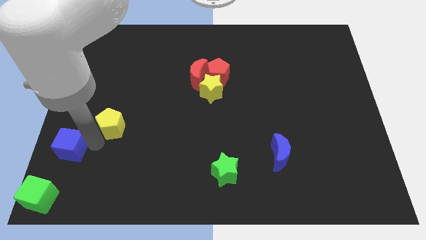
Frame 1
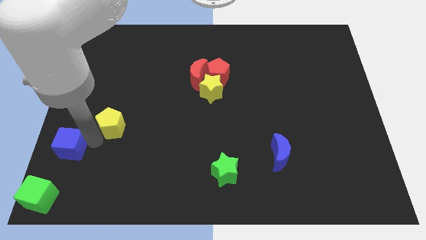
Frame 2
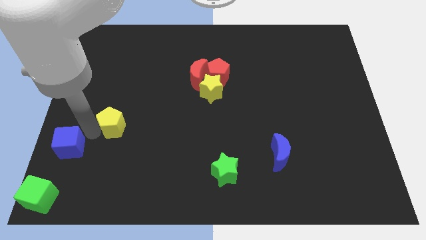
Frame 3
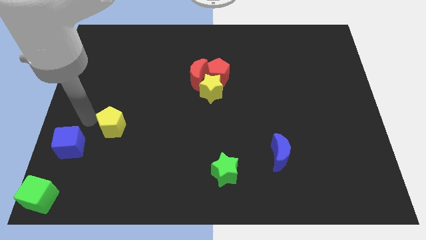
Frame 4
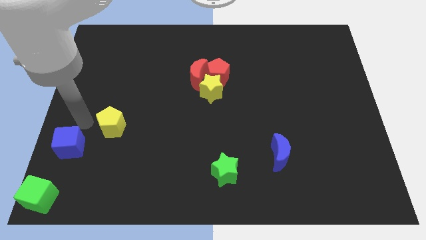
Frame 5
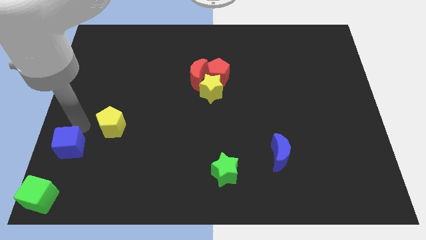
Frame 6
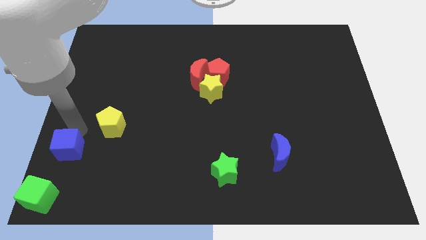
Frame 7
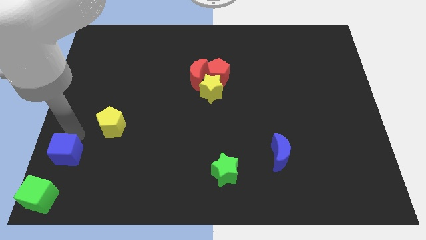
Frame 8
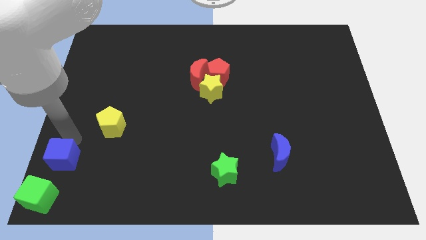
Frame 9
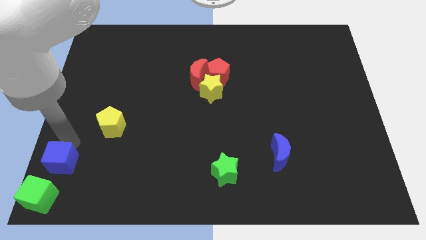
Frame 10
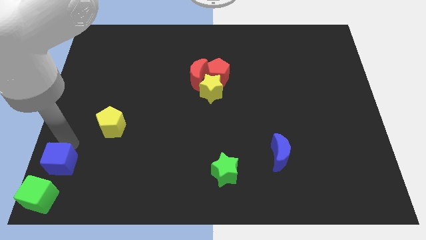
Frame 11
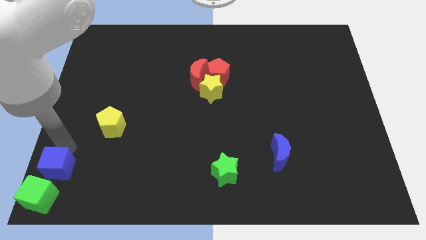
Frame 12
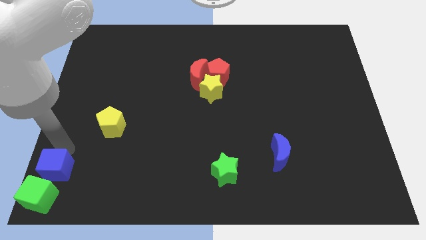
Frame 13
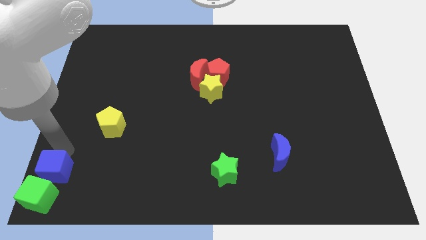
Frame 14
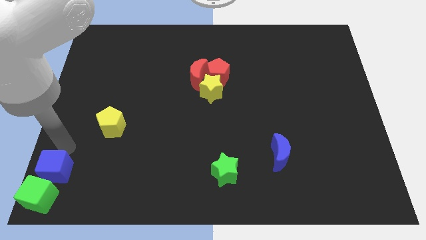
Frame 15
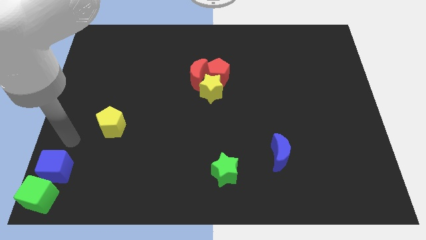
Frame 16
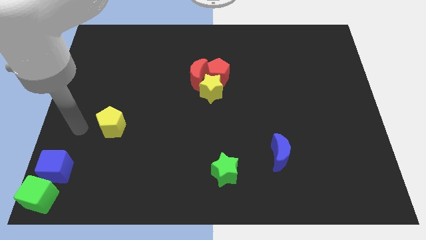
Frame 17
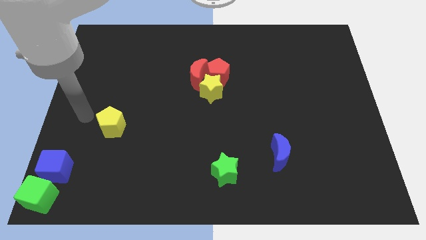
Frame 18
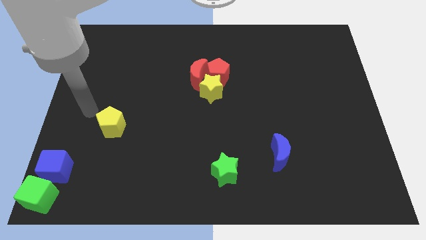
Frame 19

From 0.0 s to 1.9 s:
move blue cube close to the green cube

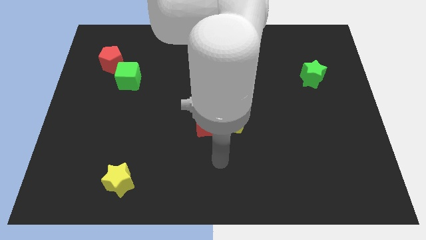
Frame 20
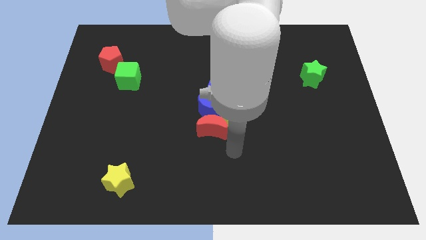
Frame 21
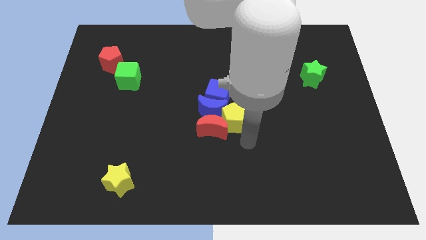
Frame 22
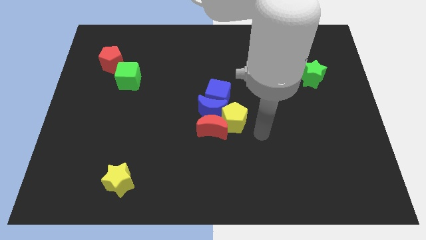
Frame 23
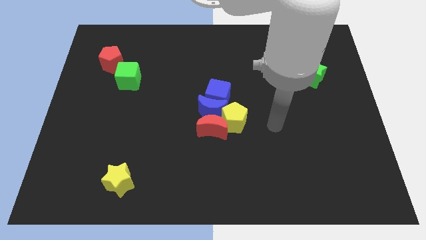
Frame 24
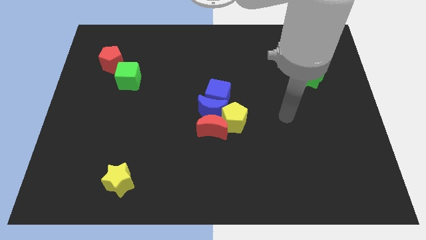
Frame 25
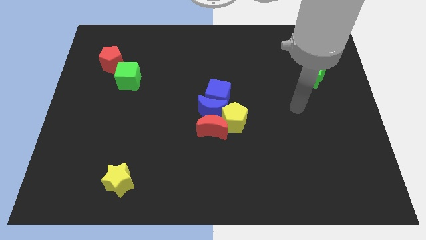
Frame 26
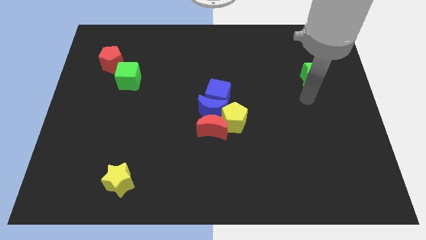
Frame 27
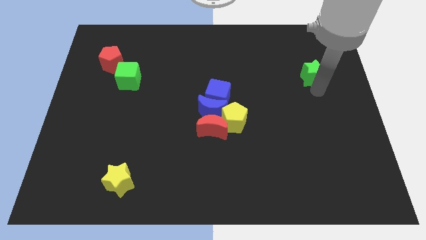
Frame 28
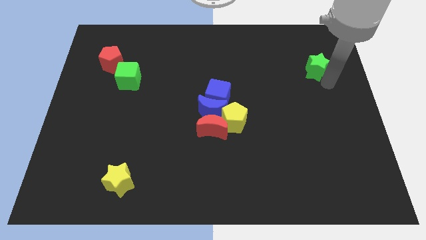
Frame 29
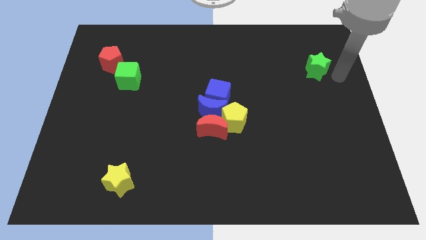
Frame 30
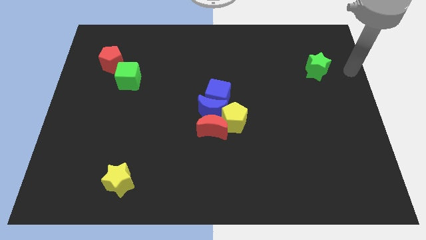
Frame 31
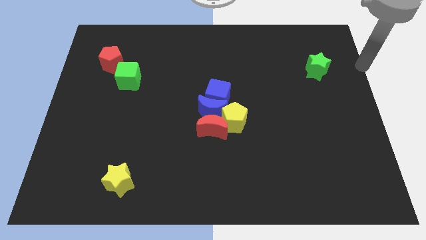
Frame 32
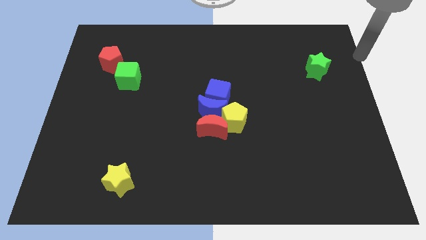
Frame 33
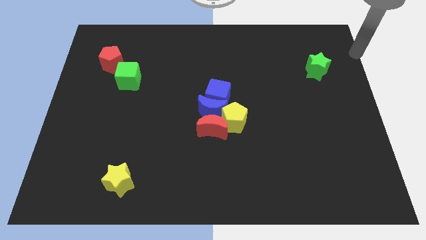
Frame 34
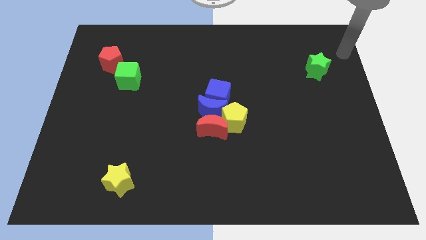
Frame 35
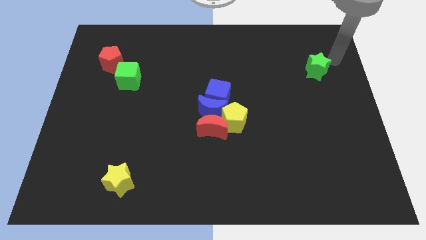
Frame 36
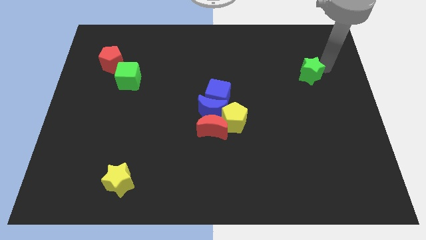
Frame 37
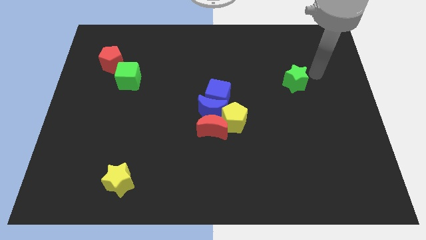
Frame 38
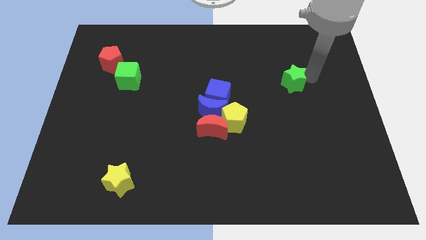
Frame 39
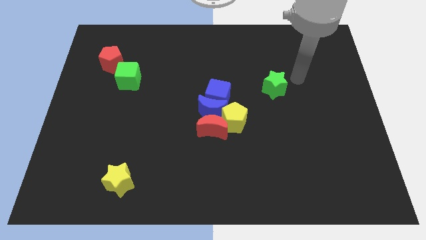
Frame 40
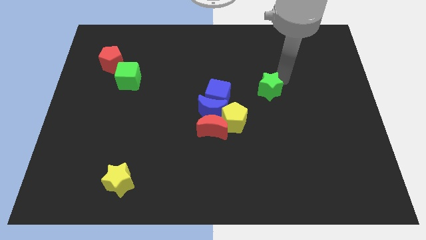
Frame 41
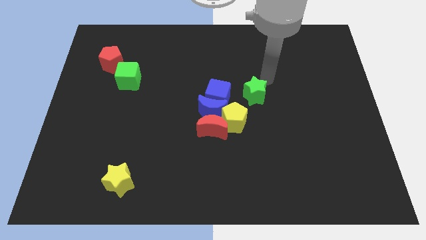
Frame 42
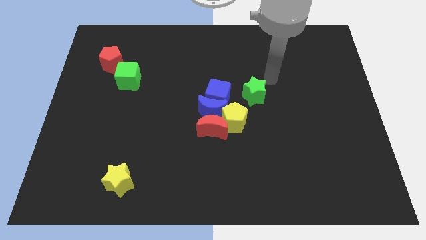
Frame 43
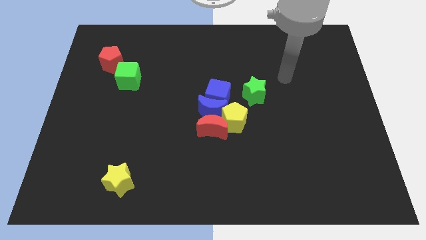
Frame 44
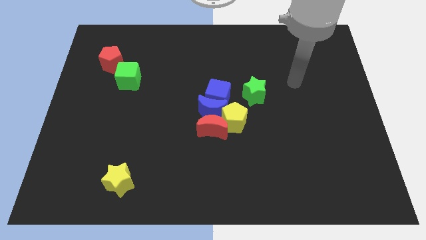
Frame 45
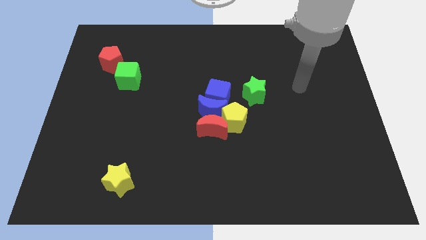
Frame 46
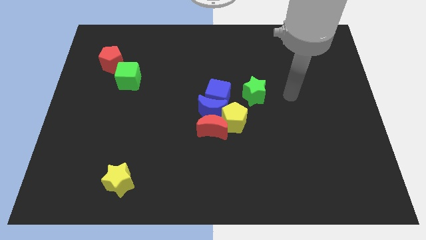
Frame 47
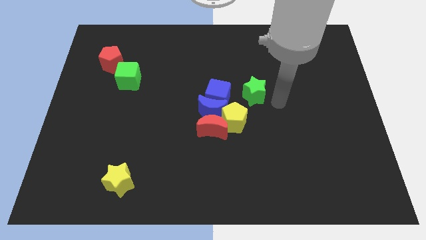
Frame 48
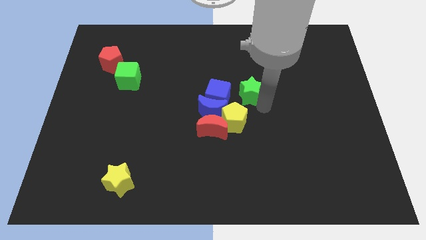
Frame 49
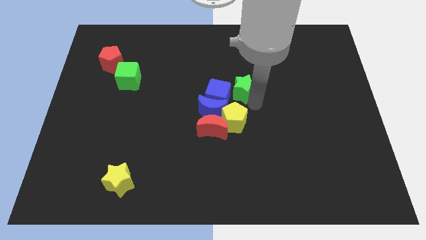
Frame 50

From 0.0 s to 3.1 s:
move the green star to the right of blue cube

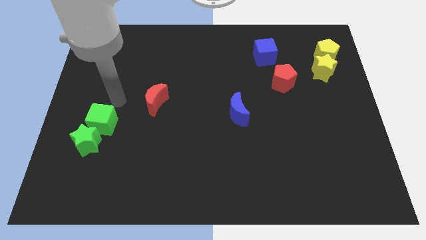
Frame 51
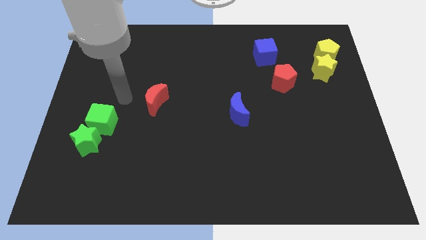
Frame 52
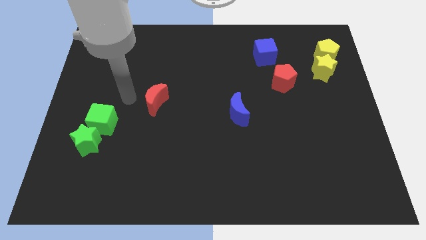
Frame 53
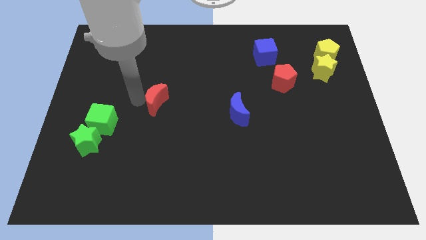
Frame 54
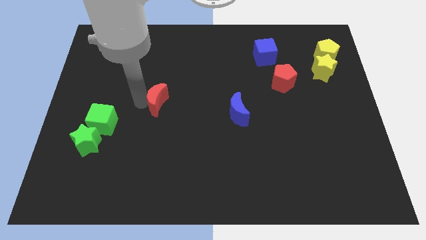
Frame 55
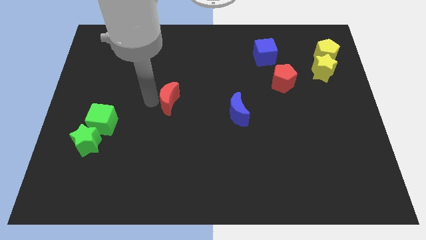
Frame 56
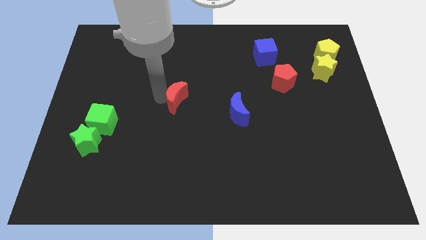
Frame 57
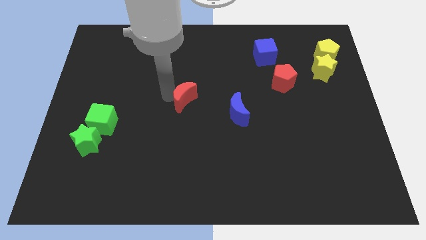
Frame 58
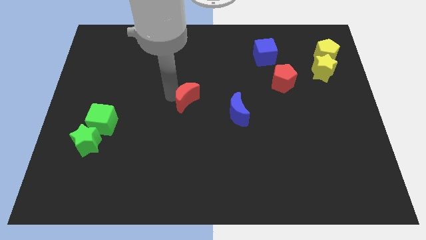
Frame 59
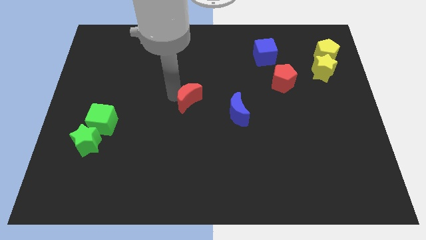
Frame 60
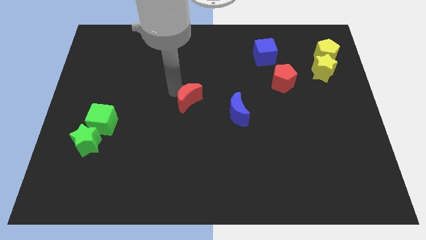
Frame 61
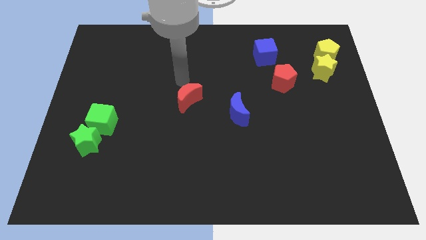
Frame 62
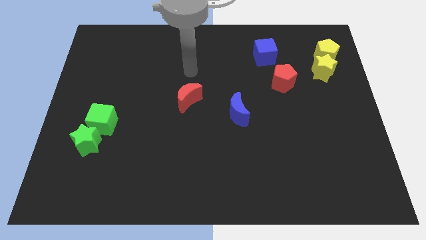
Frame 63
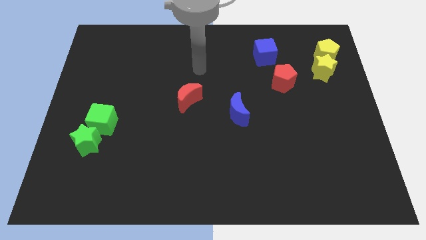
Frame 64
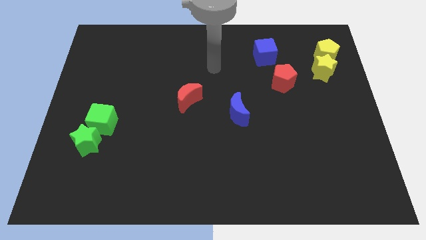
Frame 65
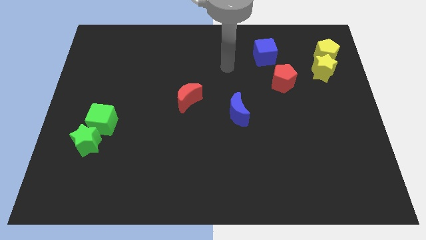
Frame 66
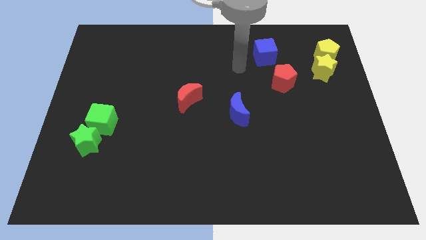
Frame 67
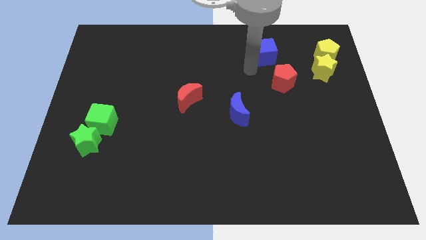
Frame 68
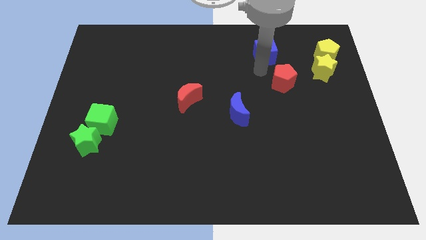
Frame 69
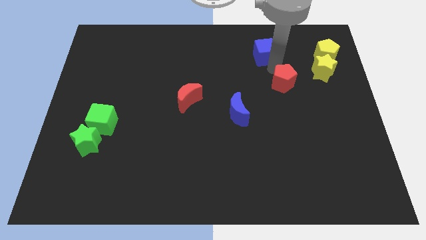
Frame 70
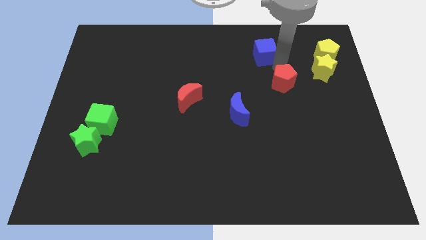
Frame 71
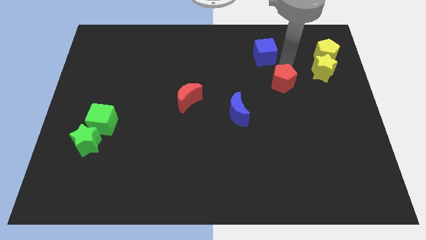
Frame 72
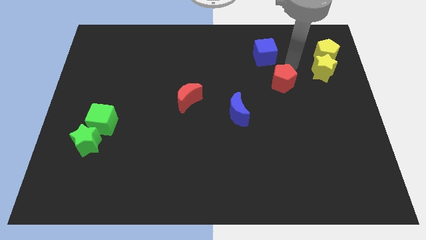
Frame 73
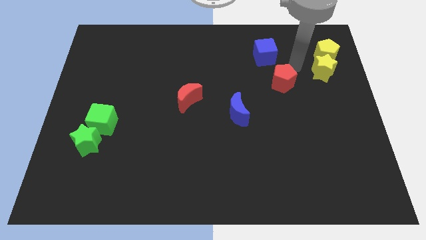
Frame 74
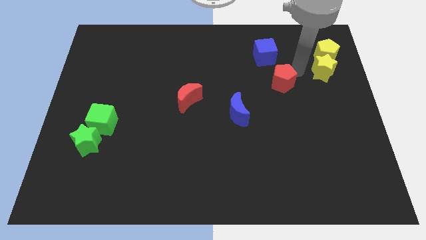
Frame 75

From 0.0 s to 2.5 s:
move the red pentagon to the right of the board

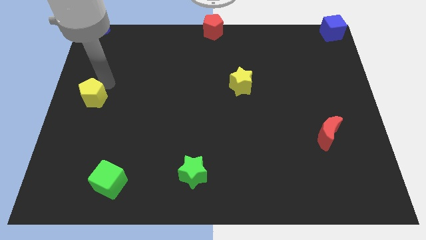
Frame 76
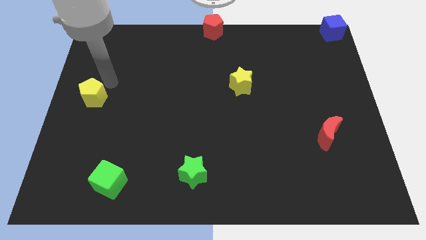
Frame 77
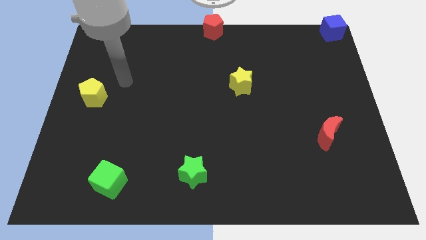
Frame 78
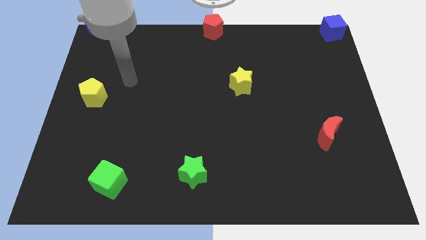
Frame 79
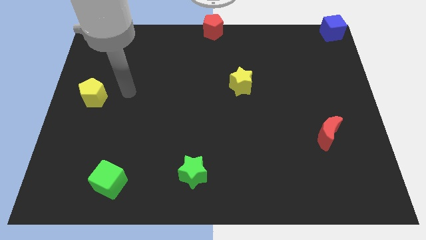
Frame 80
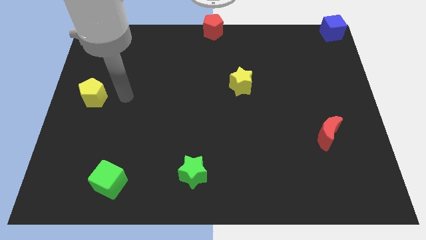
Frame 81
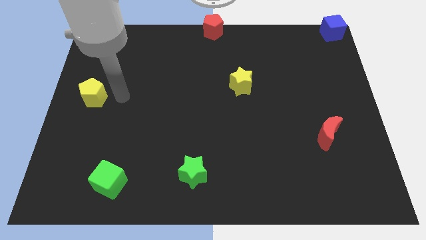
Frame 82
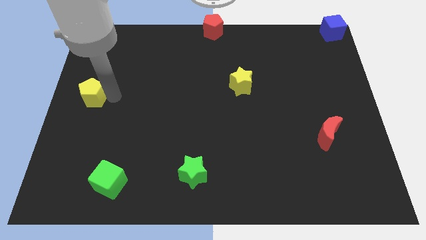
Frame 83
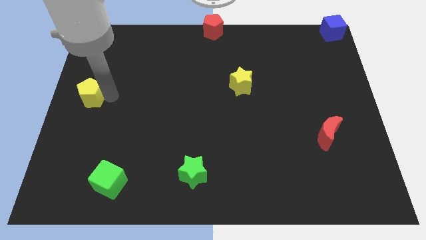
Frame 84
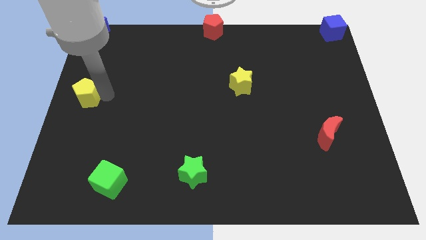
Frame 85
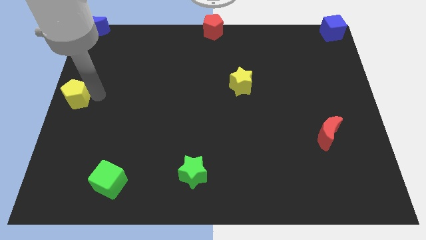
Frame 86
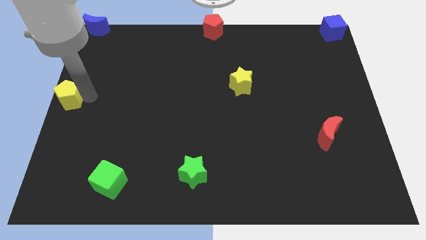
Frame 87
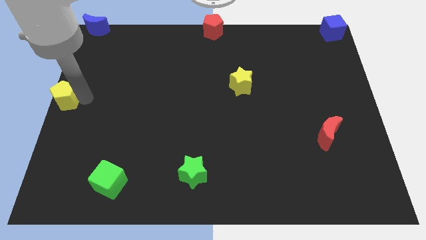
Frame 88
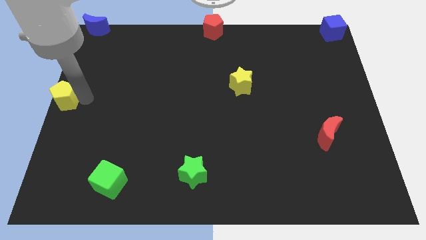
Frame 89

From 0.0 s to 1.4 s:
drag the yellow pentagon to the center left
